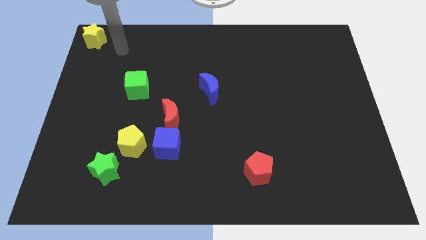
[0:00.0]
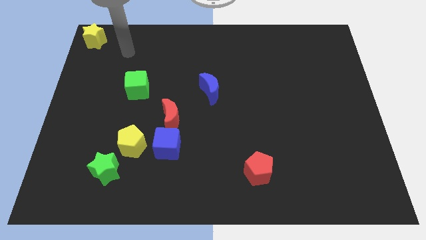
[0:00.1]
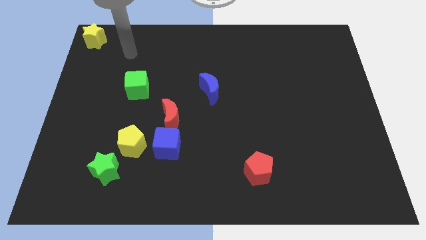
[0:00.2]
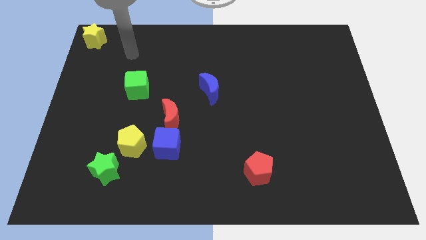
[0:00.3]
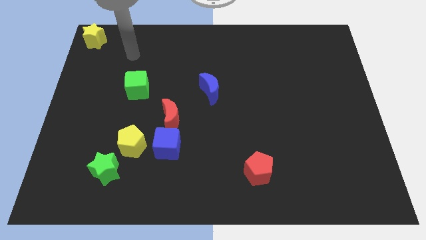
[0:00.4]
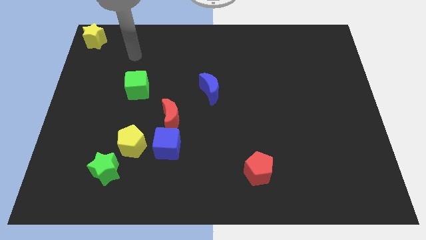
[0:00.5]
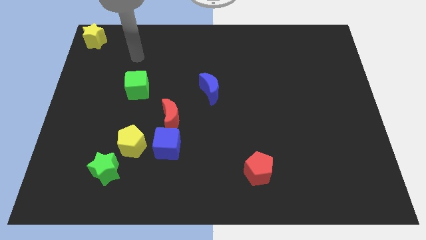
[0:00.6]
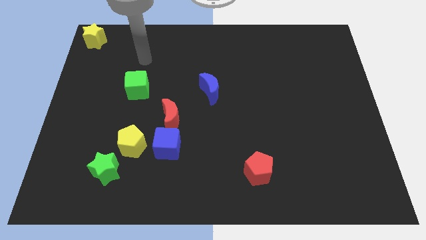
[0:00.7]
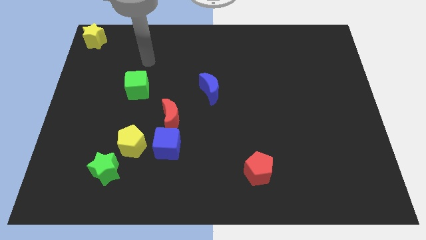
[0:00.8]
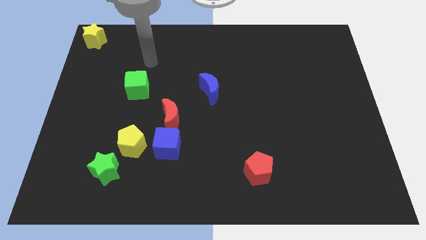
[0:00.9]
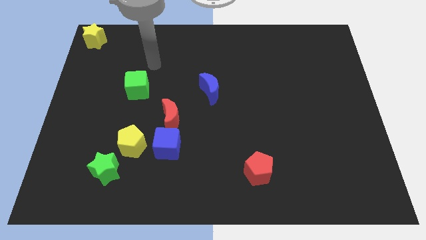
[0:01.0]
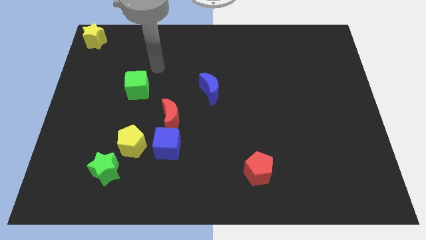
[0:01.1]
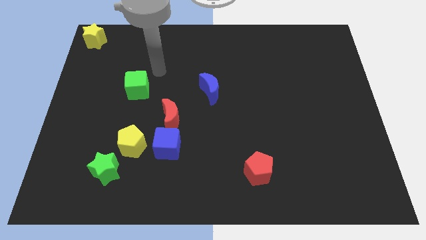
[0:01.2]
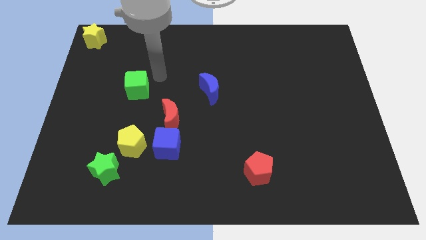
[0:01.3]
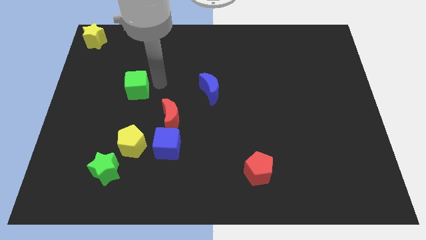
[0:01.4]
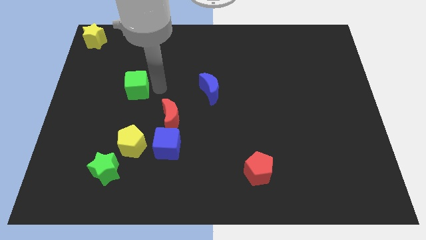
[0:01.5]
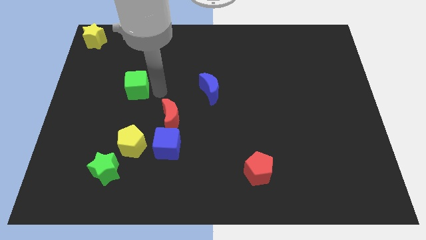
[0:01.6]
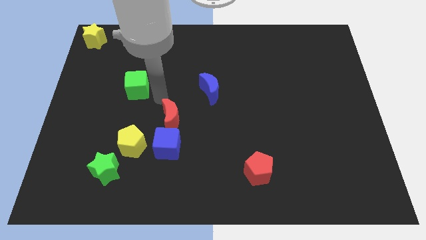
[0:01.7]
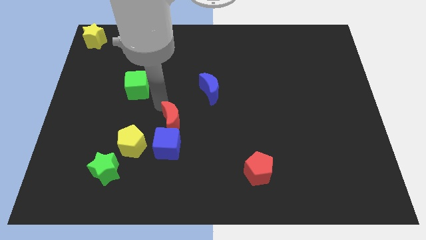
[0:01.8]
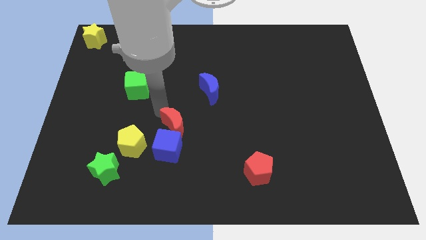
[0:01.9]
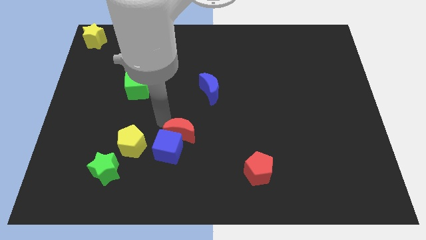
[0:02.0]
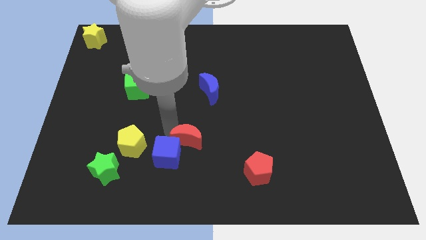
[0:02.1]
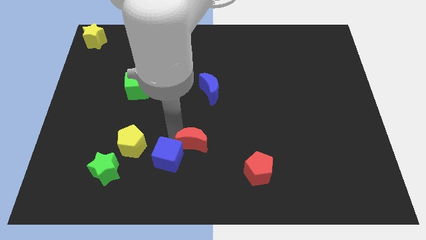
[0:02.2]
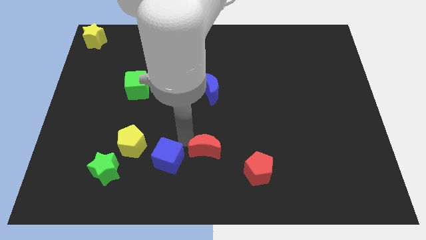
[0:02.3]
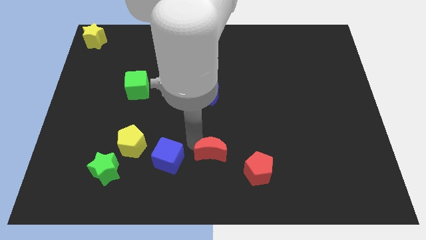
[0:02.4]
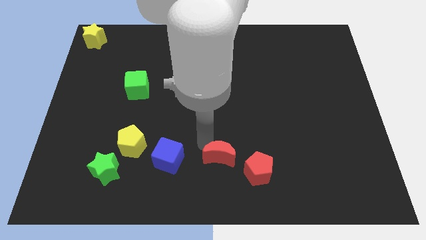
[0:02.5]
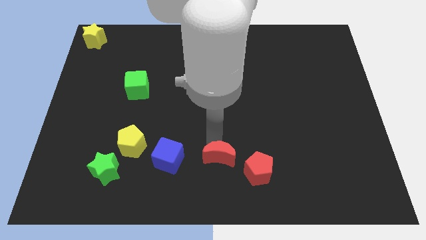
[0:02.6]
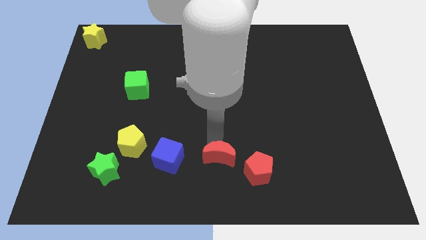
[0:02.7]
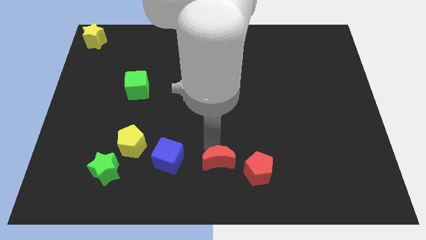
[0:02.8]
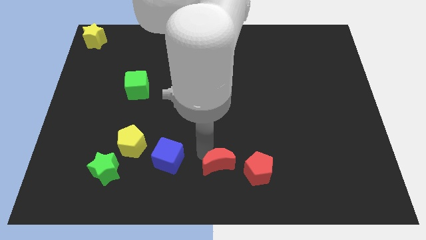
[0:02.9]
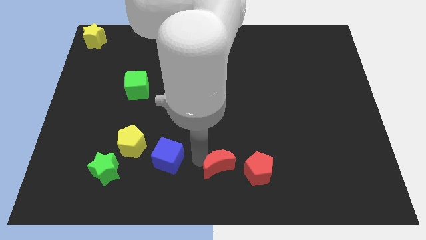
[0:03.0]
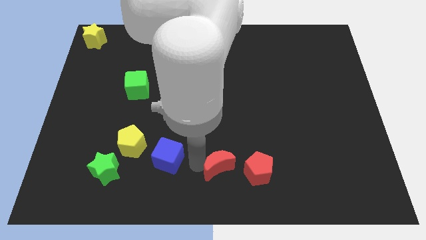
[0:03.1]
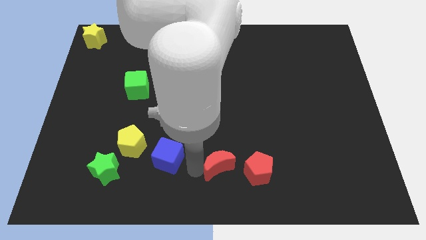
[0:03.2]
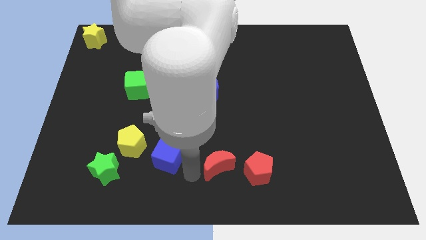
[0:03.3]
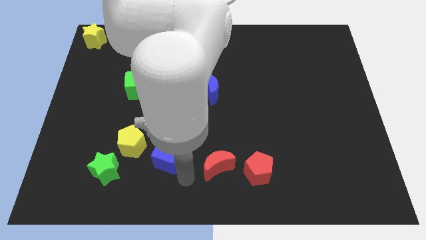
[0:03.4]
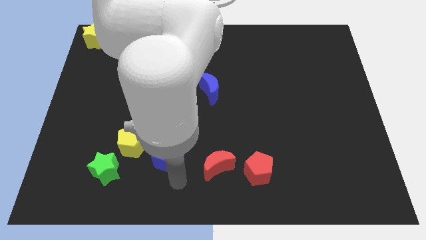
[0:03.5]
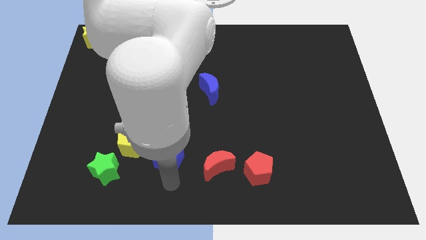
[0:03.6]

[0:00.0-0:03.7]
place the red moon to the left side of the red pentagon

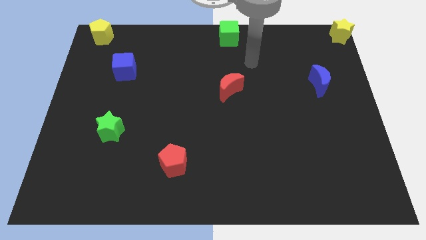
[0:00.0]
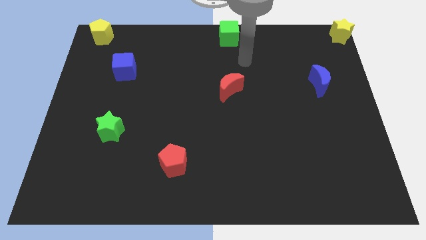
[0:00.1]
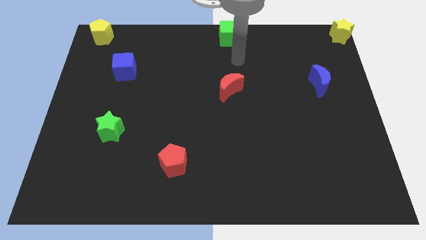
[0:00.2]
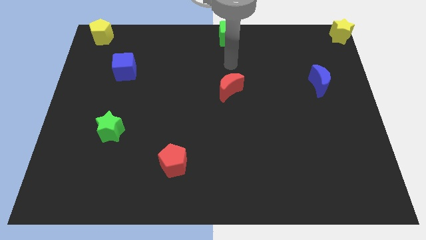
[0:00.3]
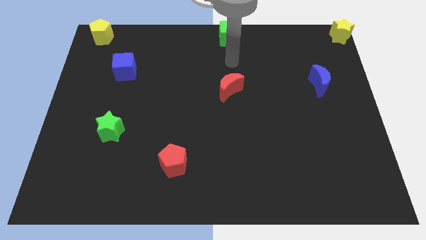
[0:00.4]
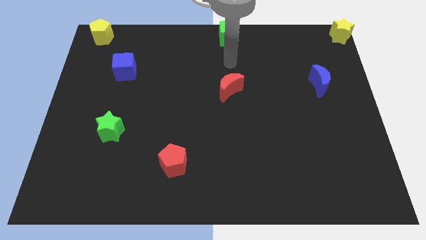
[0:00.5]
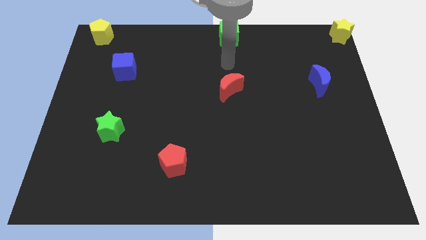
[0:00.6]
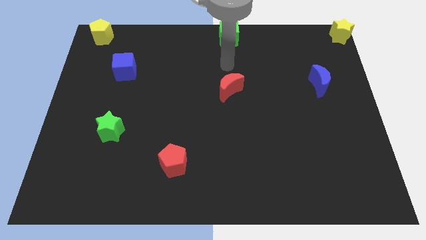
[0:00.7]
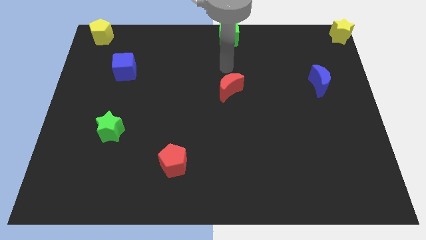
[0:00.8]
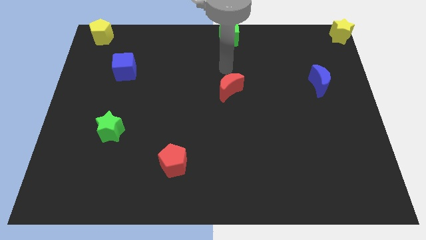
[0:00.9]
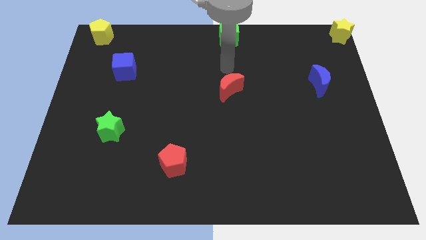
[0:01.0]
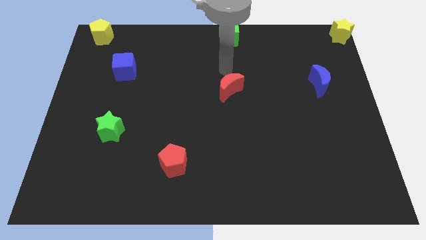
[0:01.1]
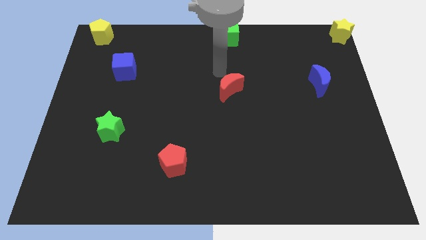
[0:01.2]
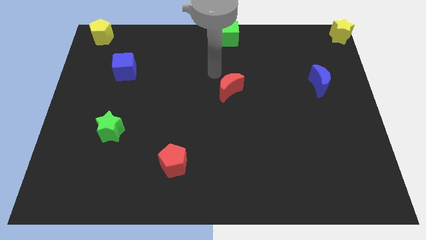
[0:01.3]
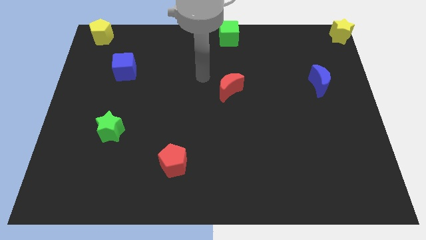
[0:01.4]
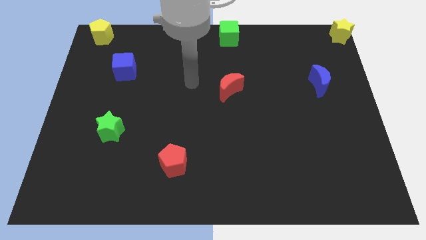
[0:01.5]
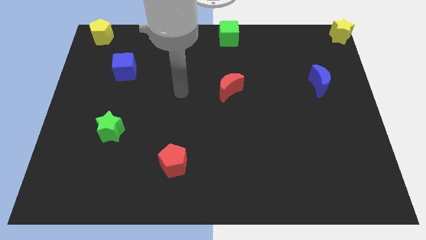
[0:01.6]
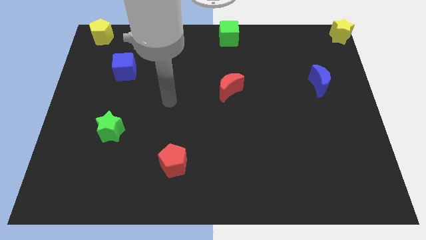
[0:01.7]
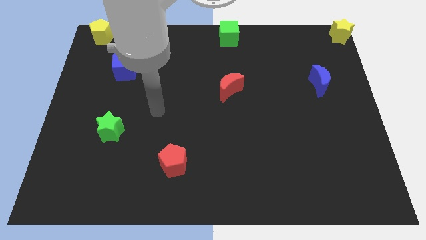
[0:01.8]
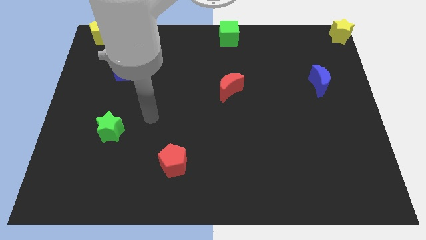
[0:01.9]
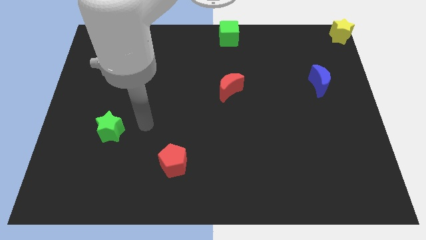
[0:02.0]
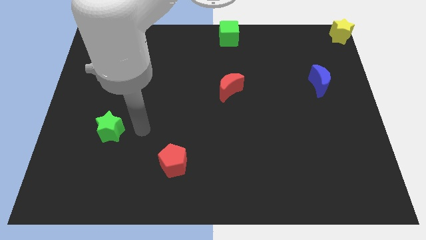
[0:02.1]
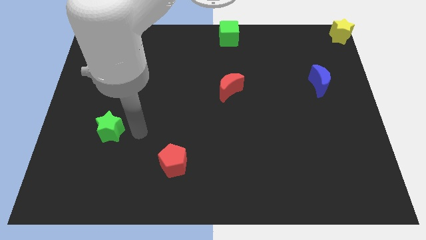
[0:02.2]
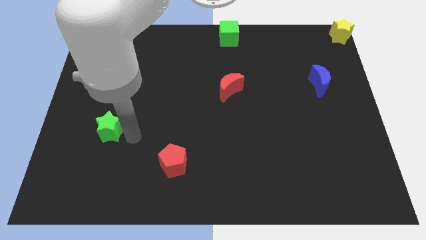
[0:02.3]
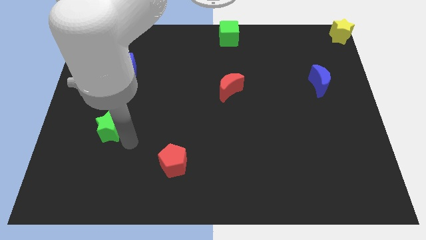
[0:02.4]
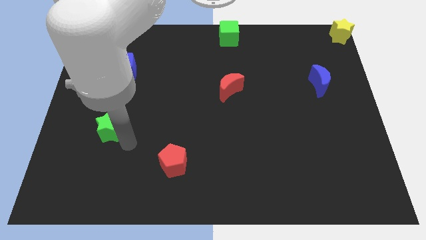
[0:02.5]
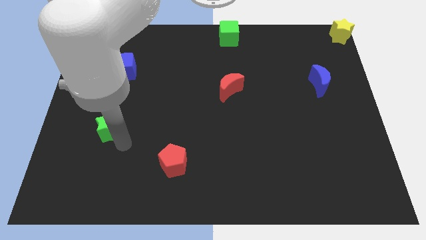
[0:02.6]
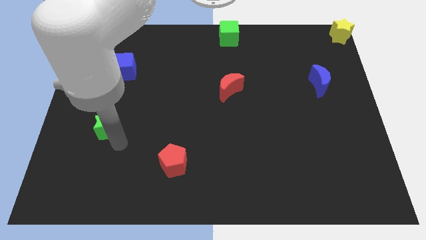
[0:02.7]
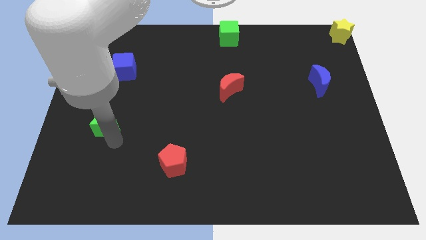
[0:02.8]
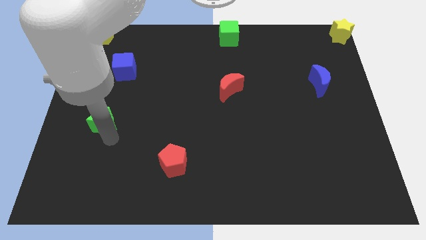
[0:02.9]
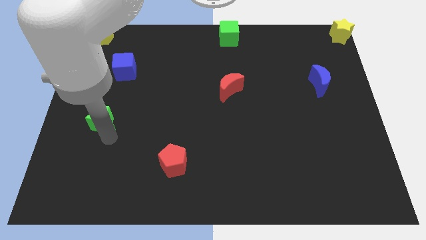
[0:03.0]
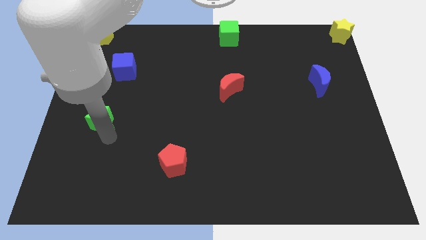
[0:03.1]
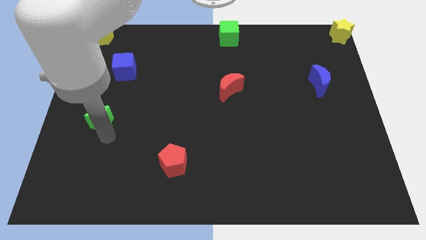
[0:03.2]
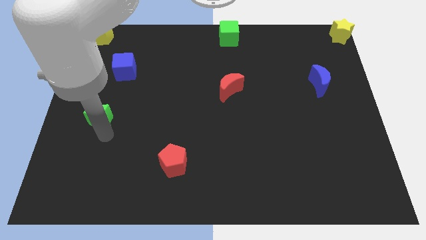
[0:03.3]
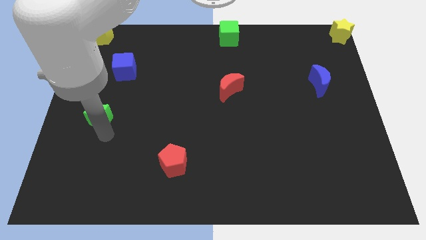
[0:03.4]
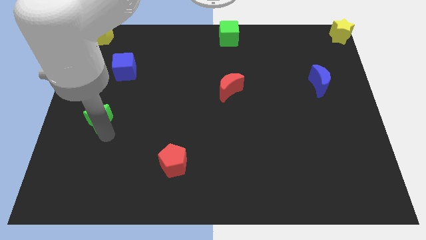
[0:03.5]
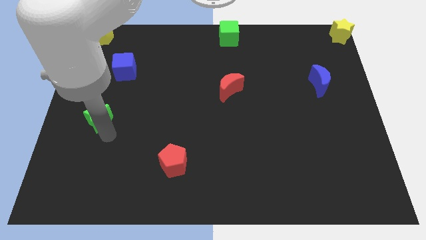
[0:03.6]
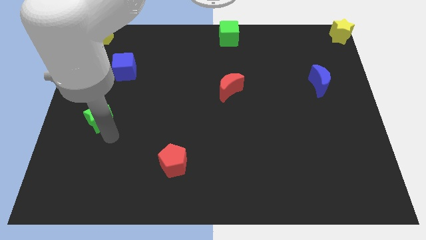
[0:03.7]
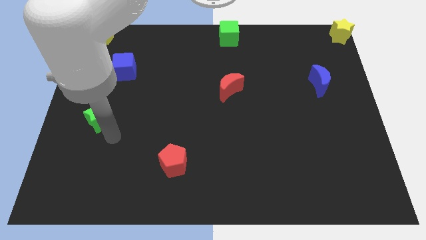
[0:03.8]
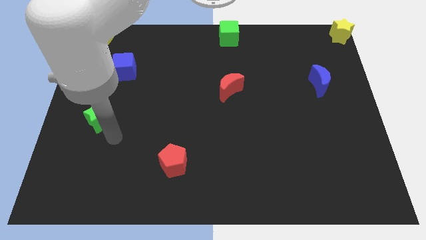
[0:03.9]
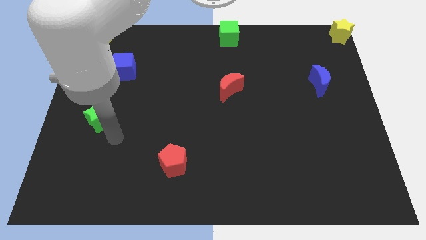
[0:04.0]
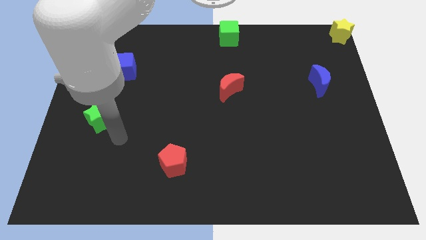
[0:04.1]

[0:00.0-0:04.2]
slightly push the green star towards the top

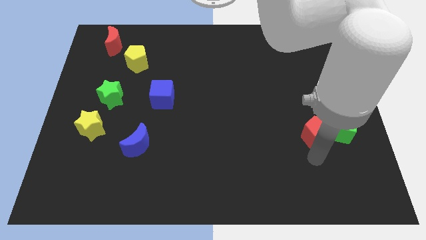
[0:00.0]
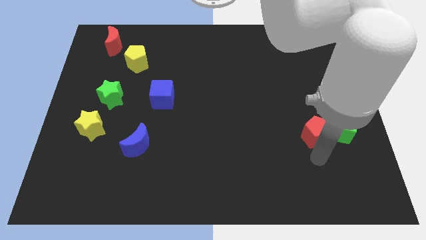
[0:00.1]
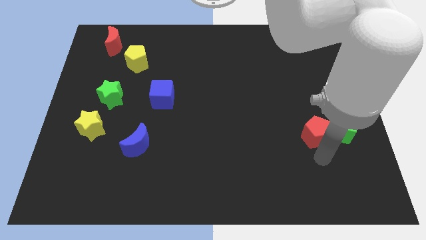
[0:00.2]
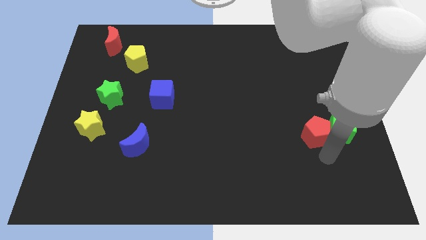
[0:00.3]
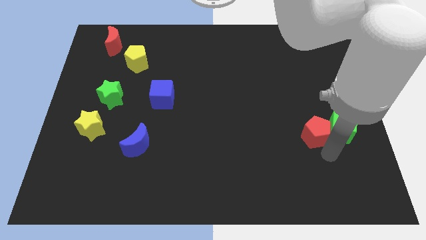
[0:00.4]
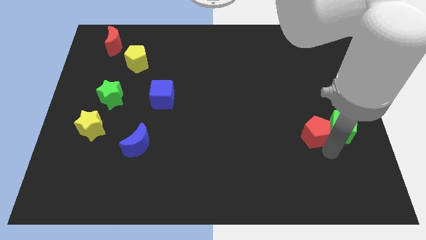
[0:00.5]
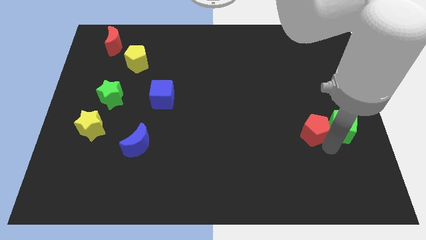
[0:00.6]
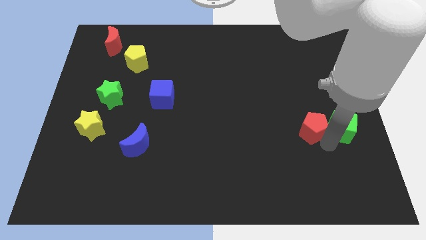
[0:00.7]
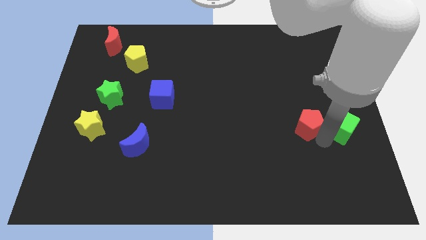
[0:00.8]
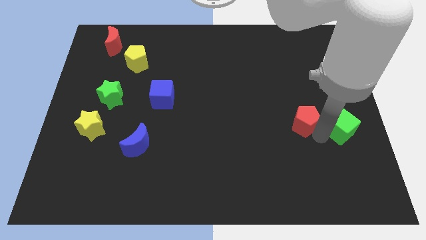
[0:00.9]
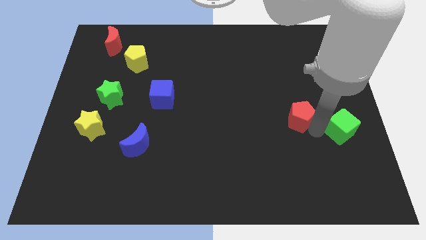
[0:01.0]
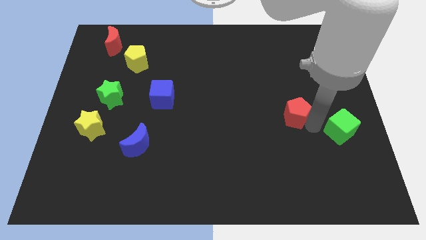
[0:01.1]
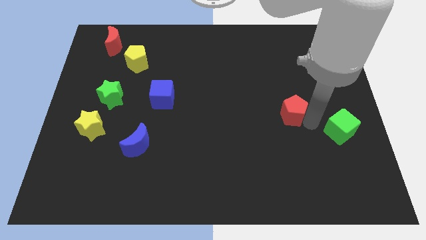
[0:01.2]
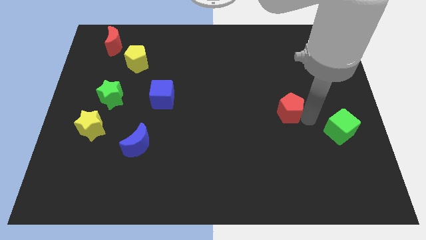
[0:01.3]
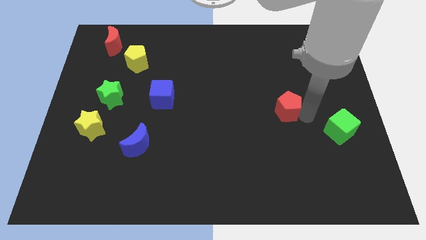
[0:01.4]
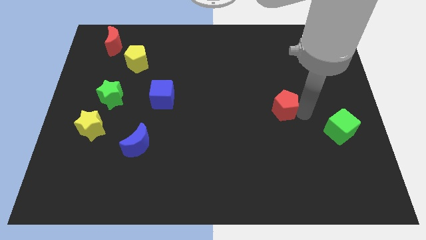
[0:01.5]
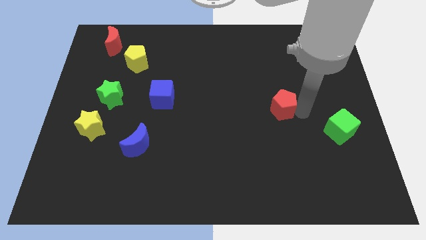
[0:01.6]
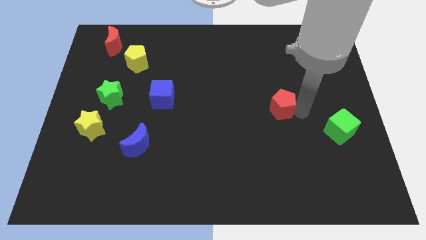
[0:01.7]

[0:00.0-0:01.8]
move the red pentagon away from the green cube
